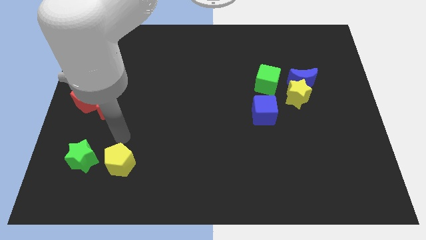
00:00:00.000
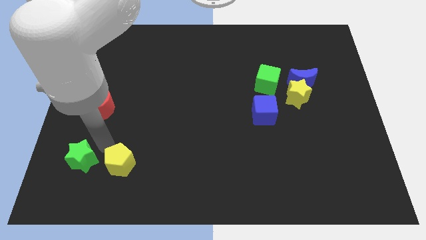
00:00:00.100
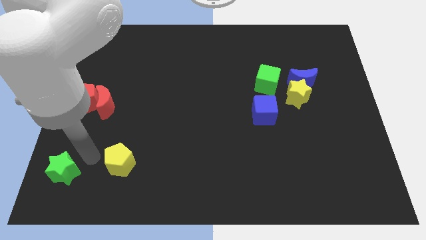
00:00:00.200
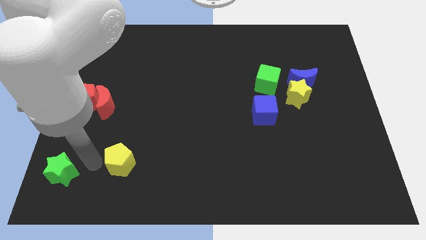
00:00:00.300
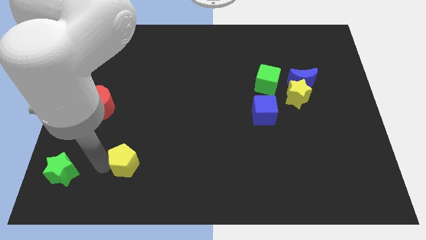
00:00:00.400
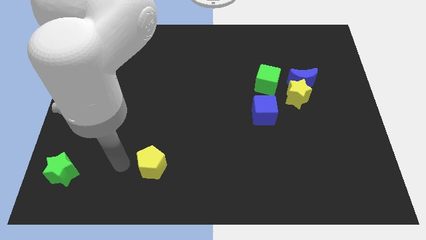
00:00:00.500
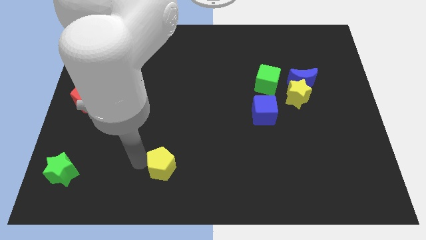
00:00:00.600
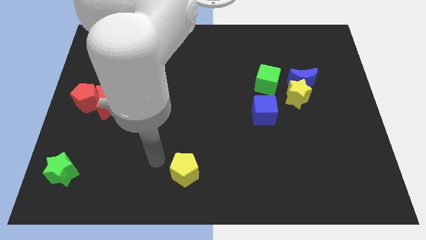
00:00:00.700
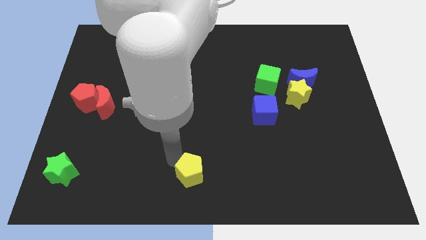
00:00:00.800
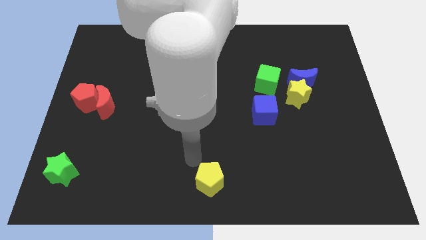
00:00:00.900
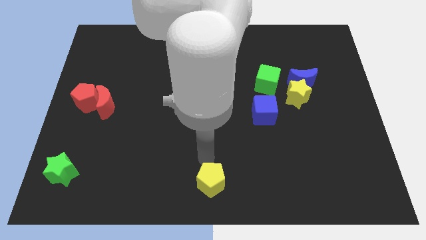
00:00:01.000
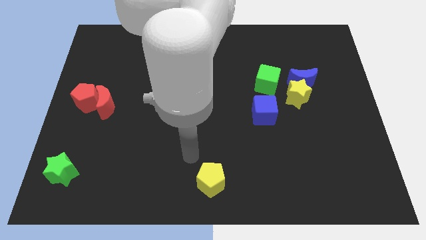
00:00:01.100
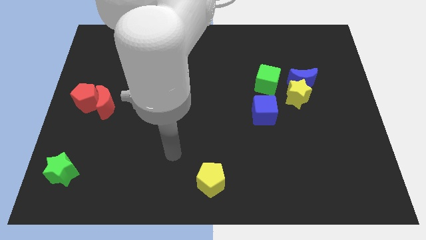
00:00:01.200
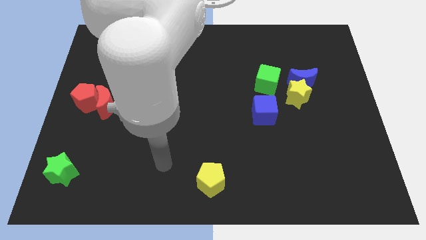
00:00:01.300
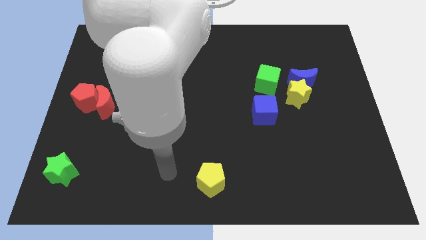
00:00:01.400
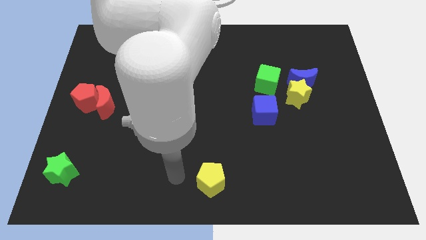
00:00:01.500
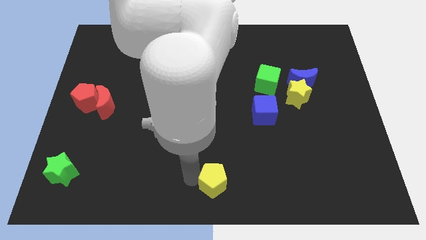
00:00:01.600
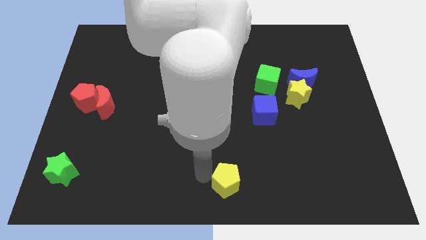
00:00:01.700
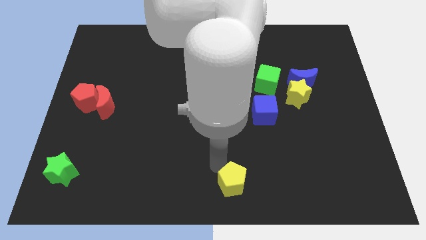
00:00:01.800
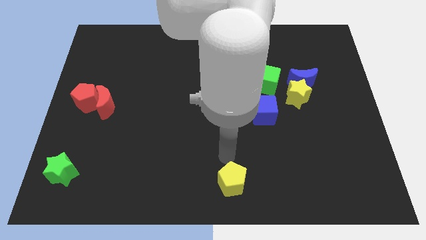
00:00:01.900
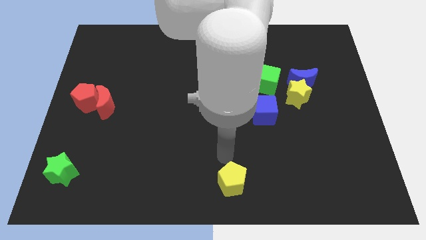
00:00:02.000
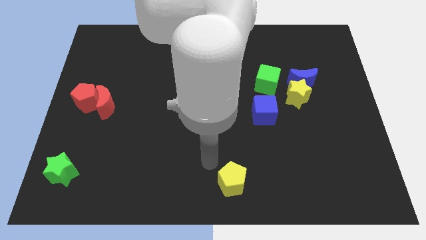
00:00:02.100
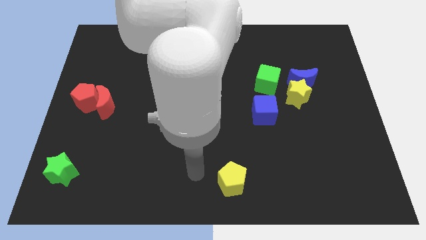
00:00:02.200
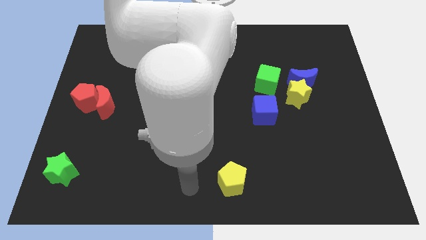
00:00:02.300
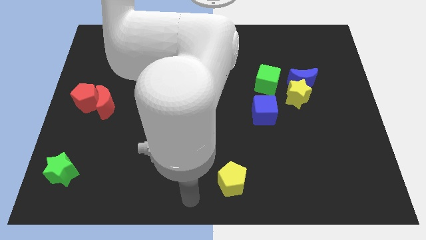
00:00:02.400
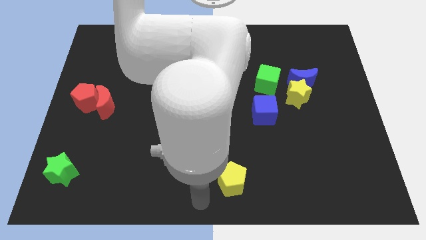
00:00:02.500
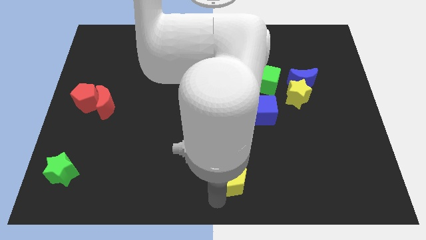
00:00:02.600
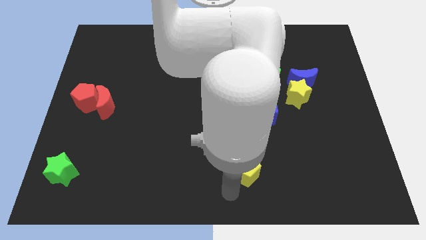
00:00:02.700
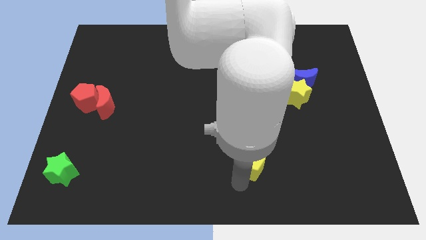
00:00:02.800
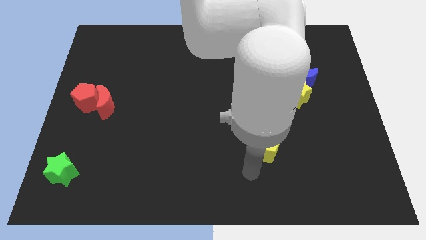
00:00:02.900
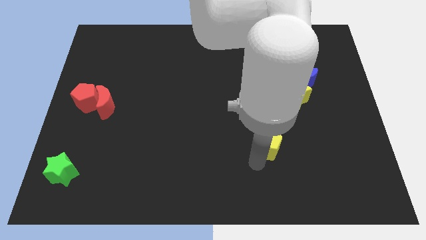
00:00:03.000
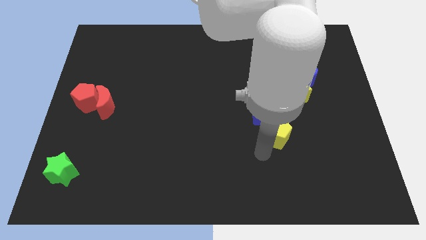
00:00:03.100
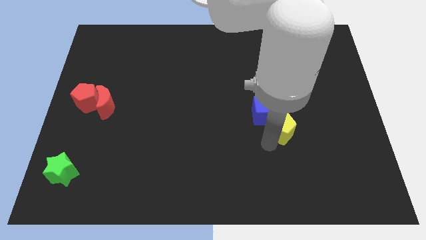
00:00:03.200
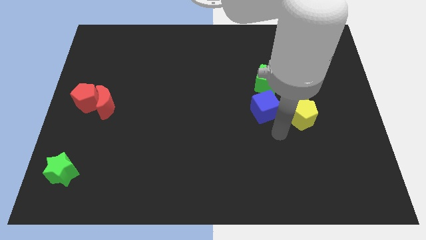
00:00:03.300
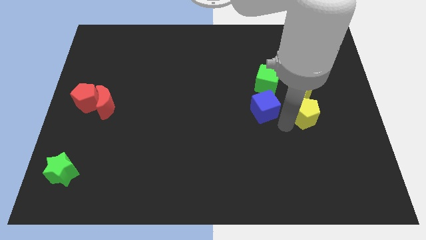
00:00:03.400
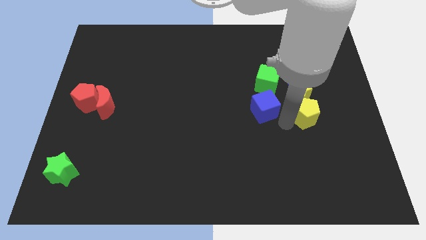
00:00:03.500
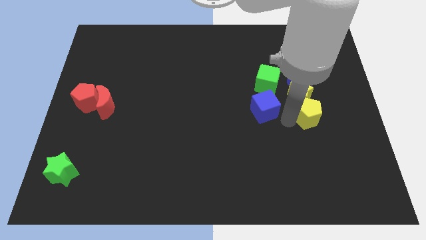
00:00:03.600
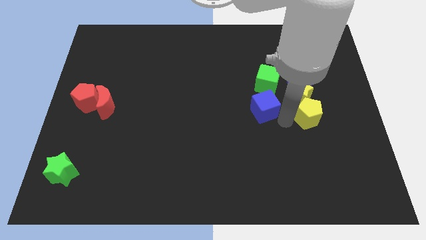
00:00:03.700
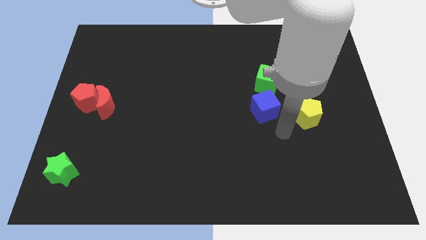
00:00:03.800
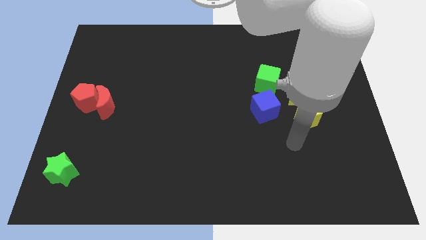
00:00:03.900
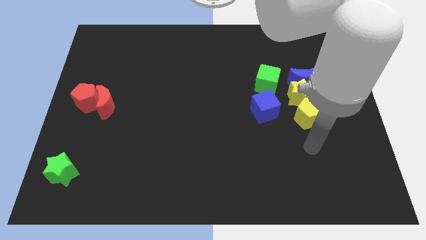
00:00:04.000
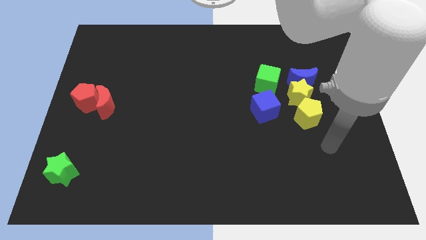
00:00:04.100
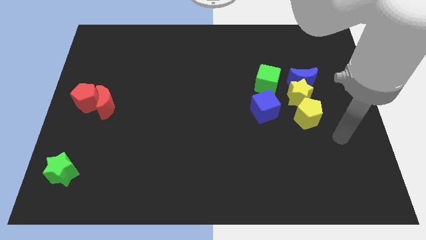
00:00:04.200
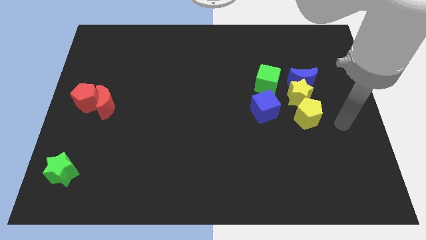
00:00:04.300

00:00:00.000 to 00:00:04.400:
drag yellow pentagon towards group of blocks

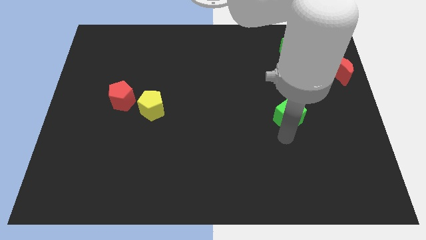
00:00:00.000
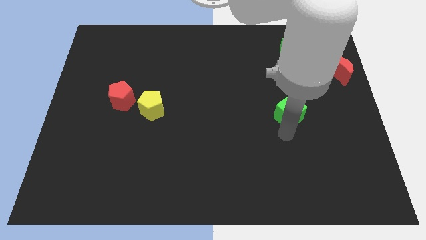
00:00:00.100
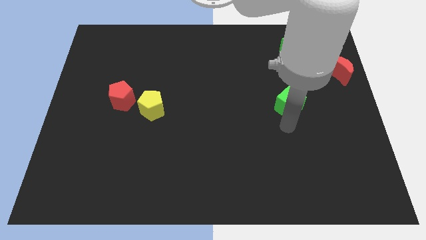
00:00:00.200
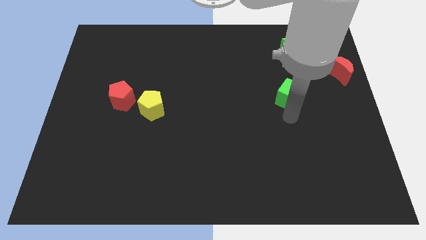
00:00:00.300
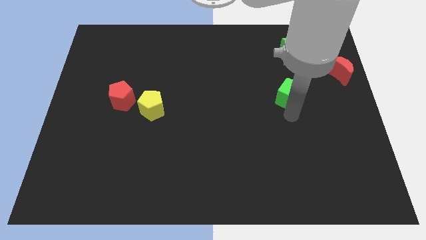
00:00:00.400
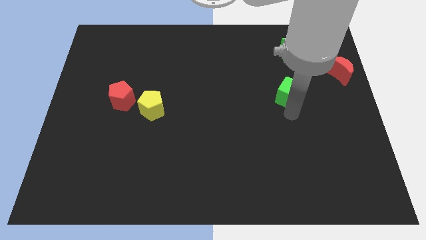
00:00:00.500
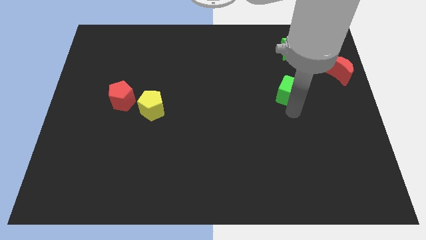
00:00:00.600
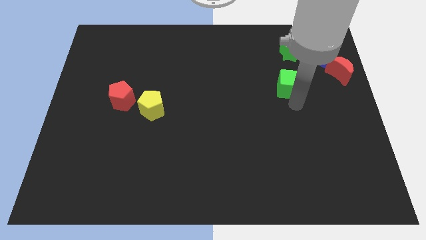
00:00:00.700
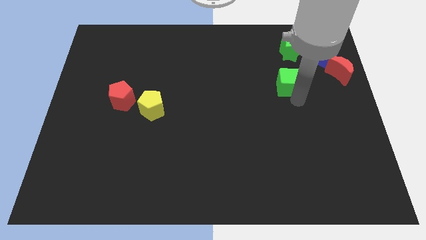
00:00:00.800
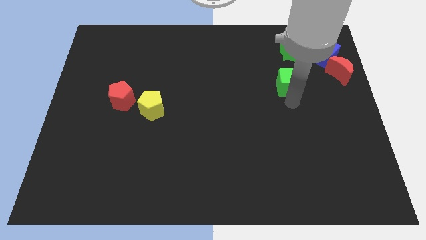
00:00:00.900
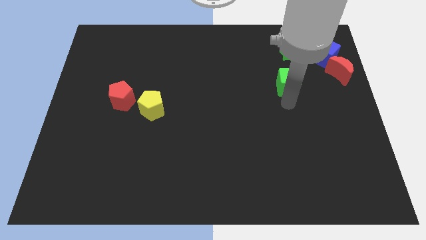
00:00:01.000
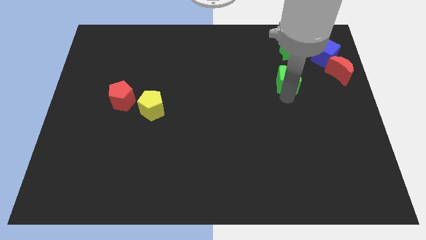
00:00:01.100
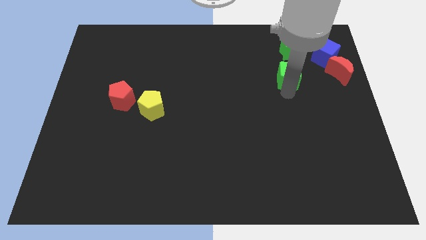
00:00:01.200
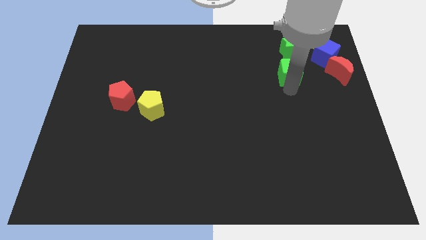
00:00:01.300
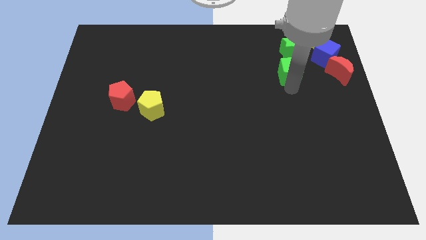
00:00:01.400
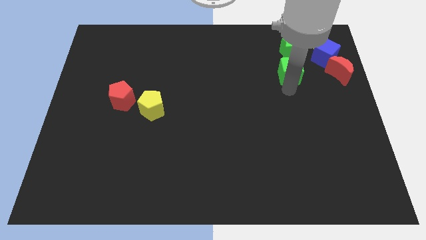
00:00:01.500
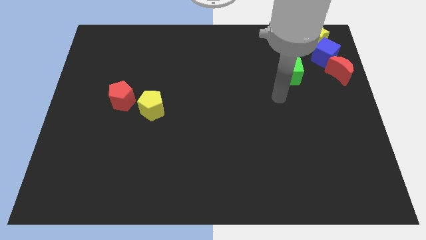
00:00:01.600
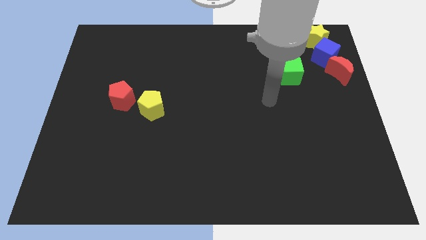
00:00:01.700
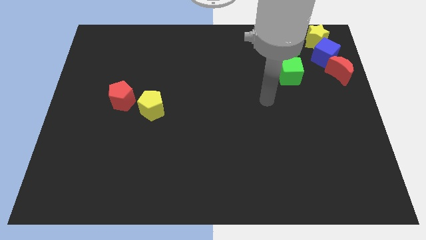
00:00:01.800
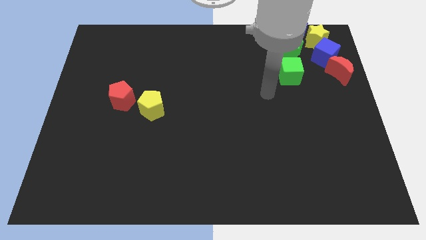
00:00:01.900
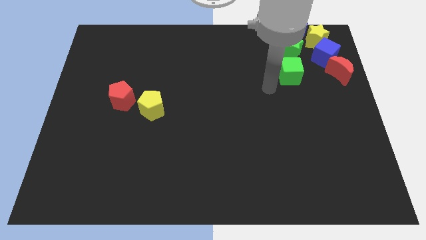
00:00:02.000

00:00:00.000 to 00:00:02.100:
slide green cube towards green star

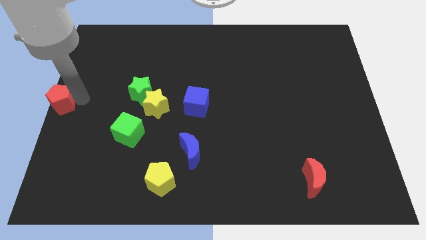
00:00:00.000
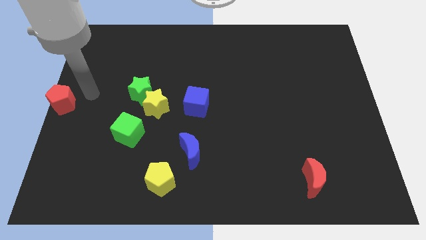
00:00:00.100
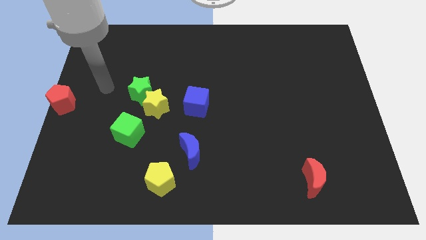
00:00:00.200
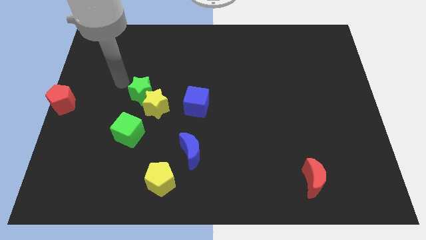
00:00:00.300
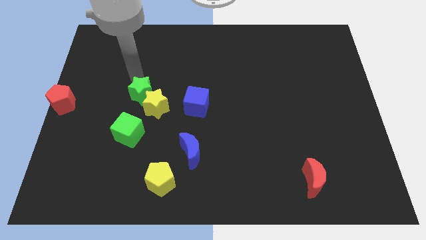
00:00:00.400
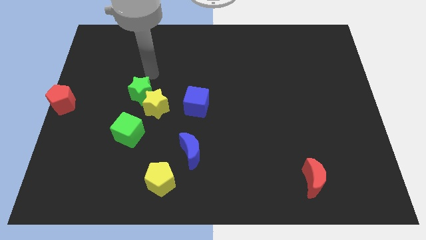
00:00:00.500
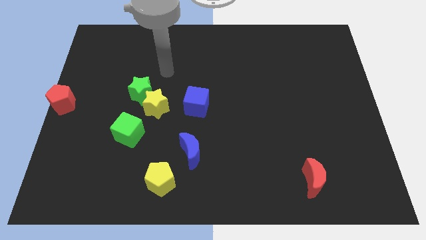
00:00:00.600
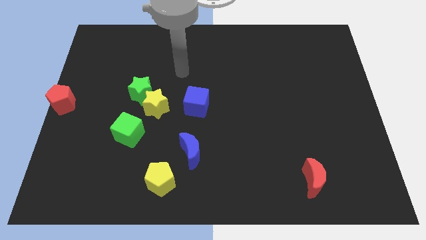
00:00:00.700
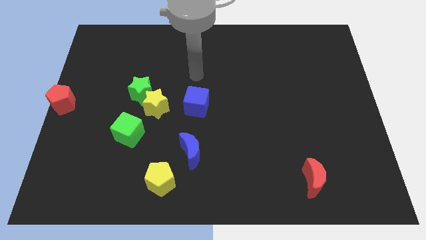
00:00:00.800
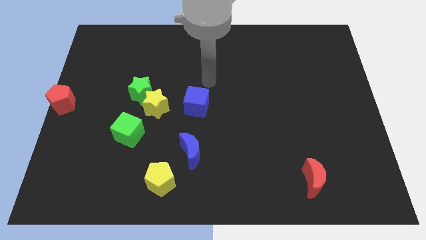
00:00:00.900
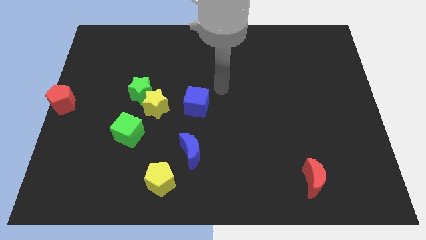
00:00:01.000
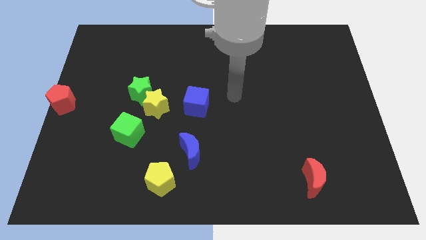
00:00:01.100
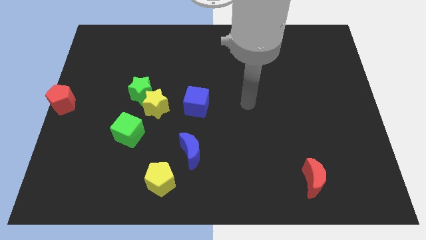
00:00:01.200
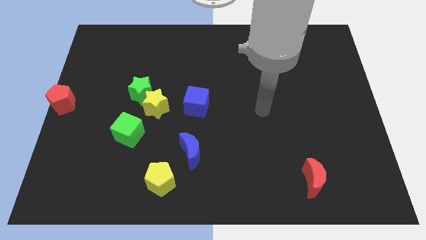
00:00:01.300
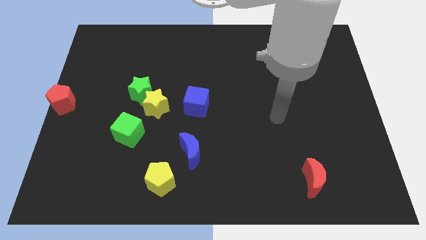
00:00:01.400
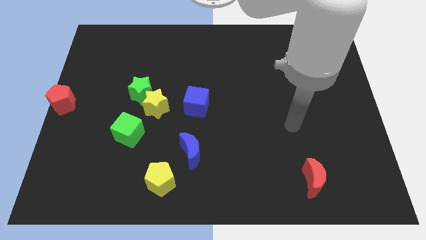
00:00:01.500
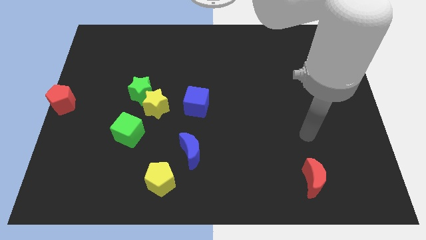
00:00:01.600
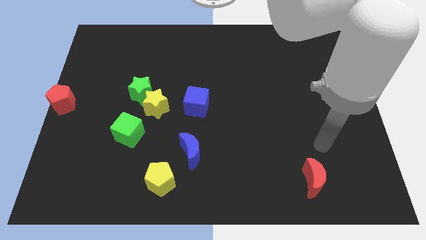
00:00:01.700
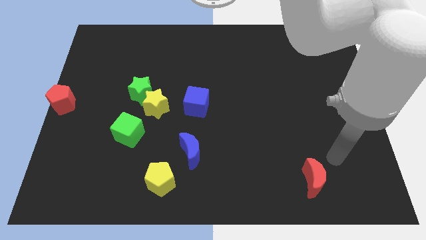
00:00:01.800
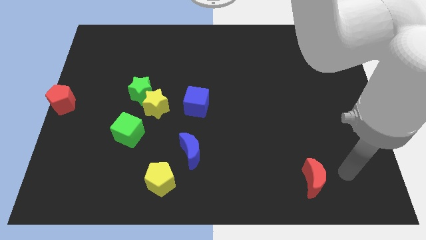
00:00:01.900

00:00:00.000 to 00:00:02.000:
move your arm away from the red pentagon

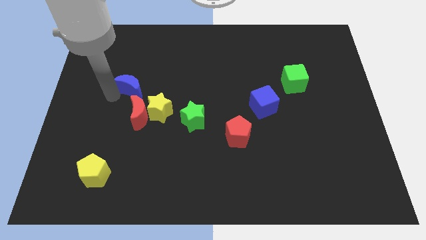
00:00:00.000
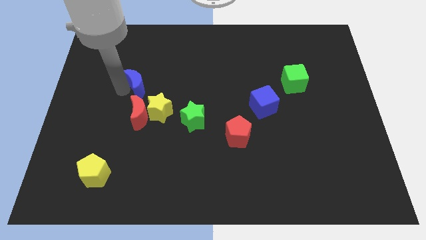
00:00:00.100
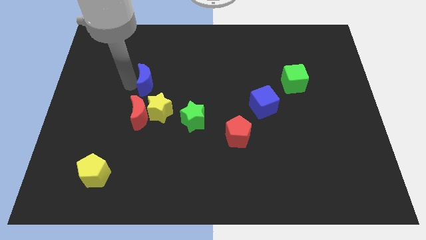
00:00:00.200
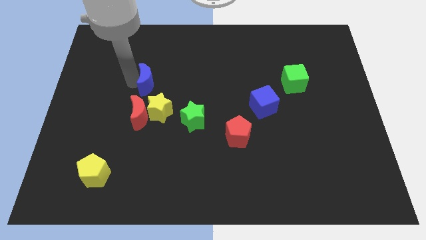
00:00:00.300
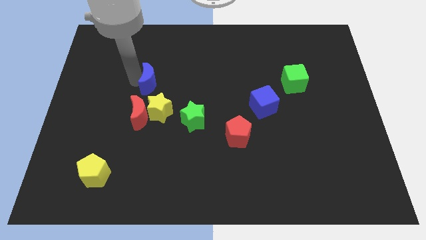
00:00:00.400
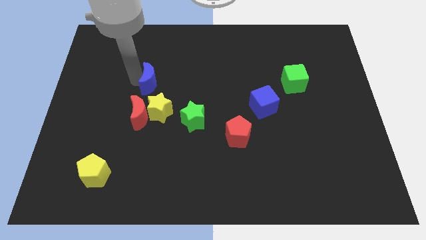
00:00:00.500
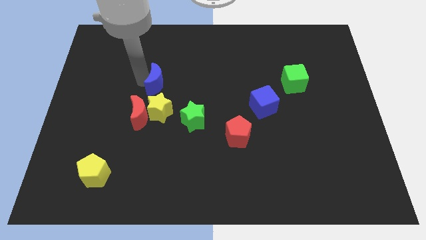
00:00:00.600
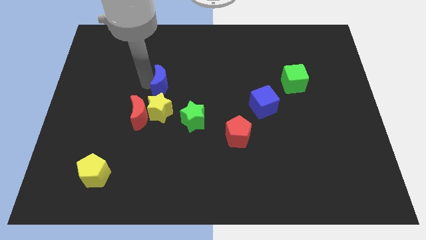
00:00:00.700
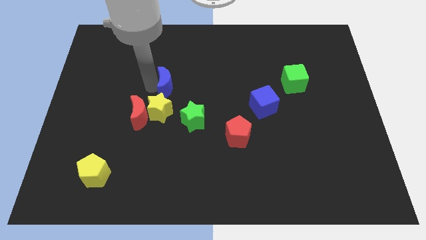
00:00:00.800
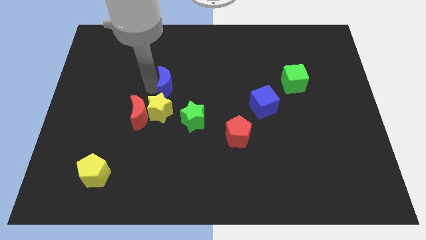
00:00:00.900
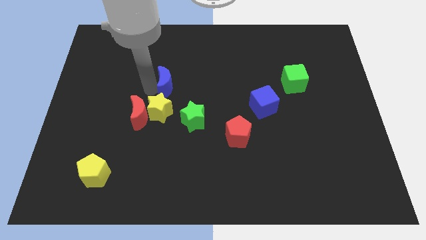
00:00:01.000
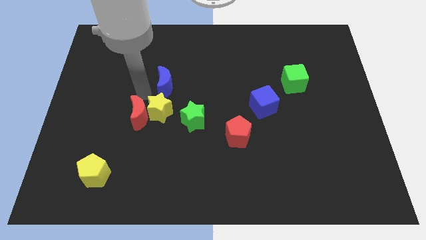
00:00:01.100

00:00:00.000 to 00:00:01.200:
move the blue moon at the top of the yellow star
